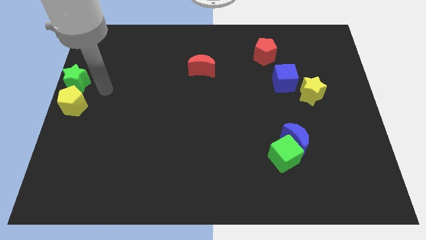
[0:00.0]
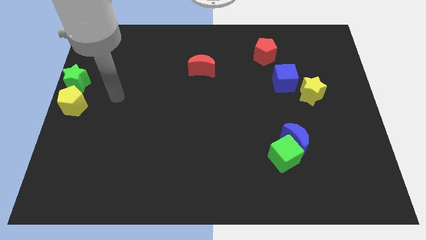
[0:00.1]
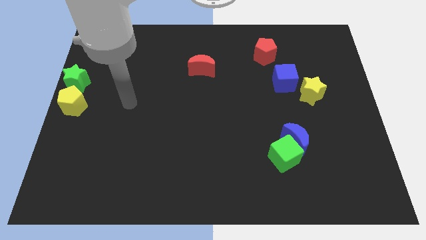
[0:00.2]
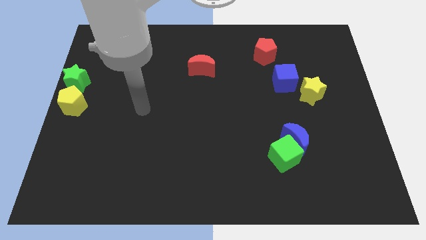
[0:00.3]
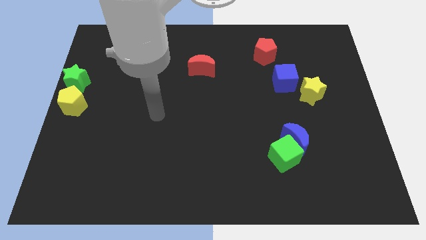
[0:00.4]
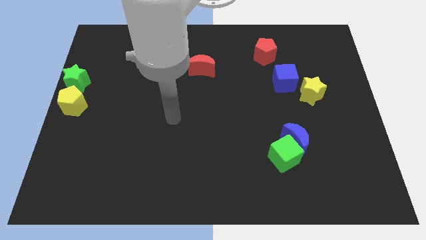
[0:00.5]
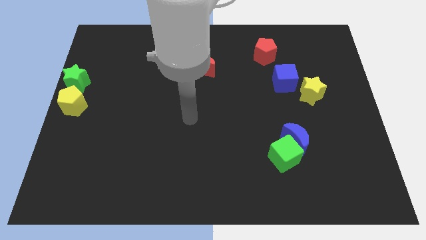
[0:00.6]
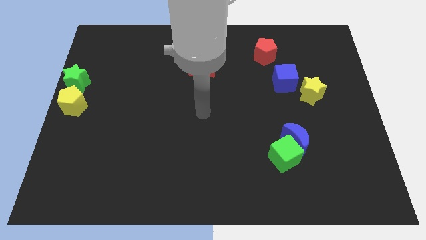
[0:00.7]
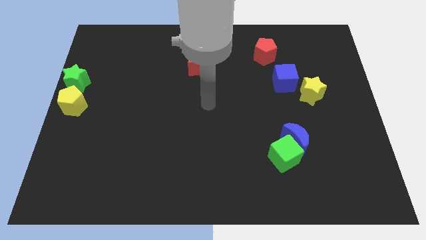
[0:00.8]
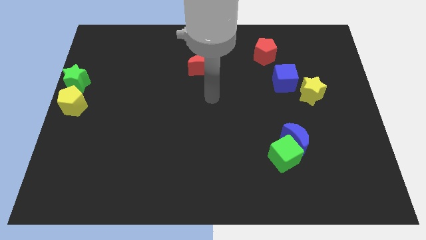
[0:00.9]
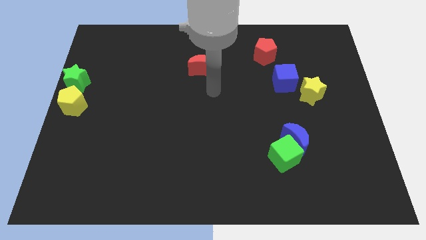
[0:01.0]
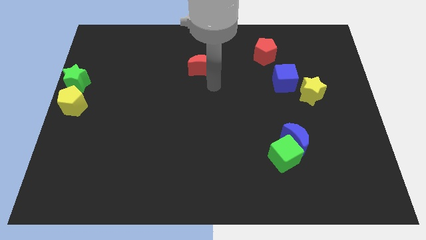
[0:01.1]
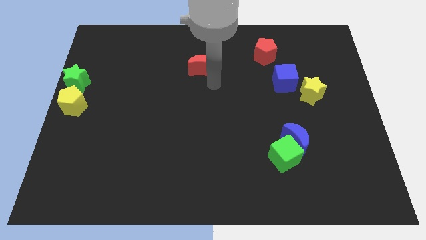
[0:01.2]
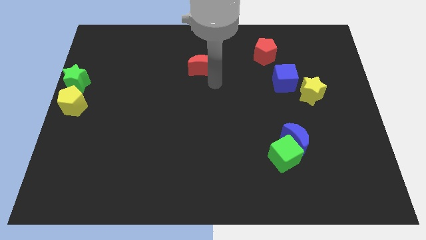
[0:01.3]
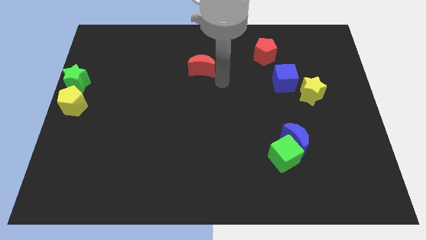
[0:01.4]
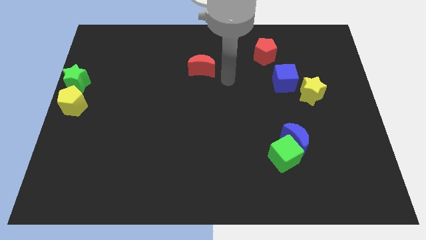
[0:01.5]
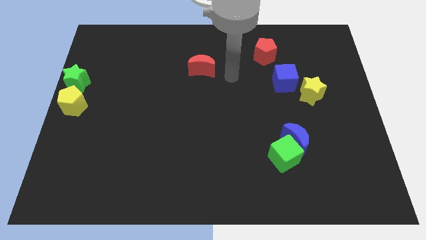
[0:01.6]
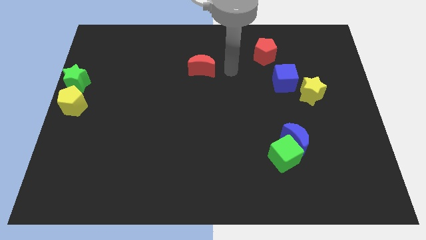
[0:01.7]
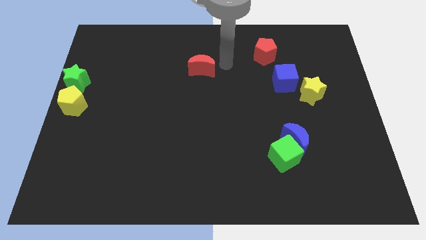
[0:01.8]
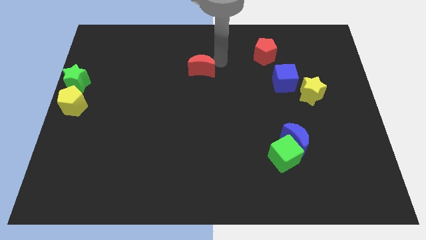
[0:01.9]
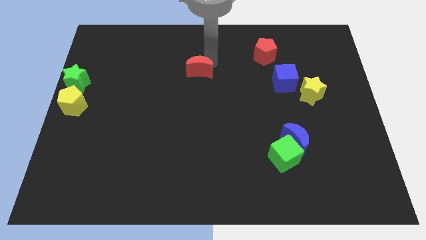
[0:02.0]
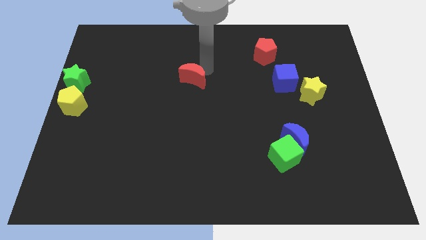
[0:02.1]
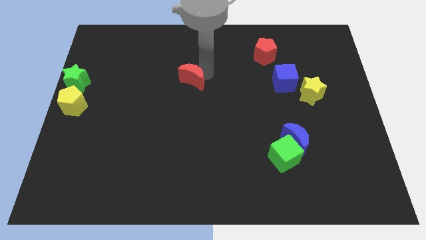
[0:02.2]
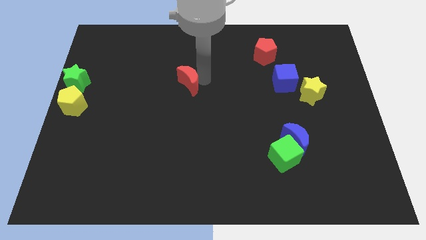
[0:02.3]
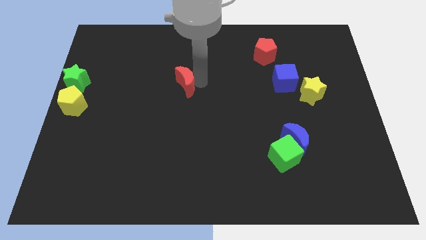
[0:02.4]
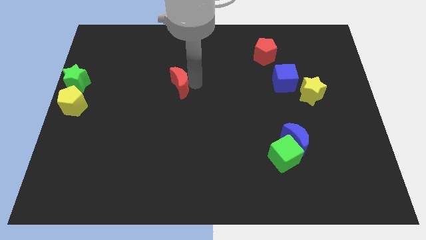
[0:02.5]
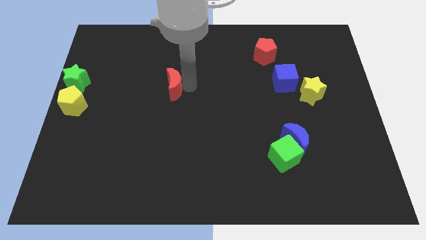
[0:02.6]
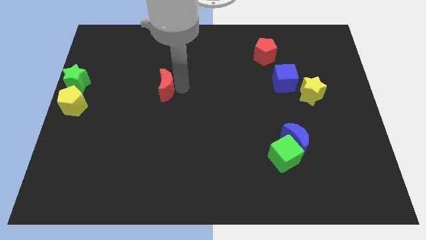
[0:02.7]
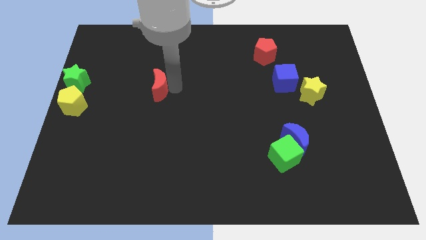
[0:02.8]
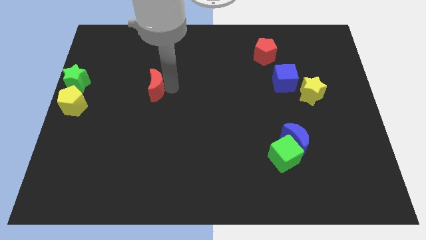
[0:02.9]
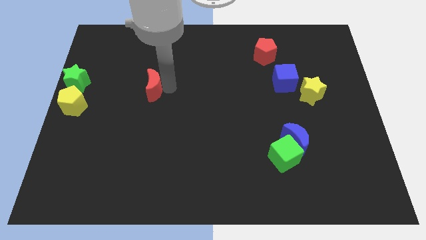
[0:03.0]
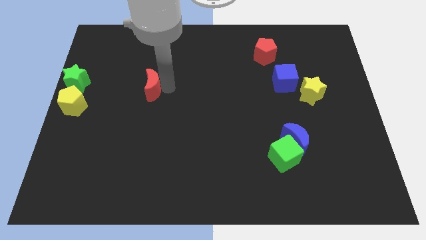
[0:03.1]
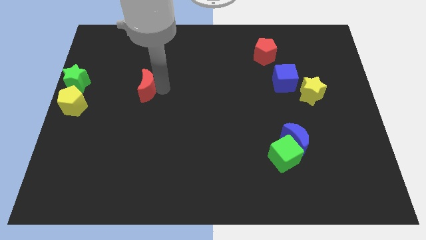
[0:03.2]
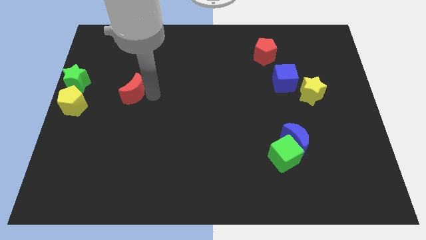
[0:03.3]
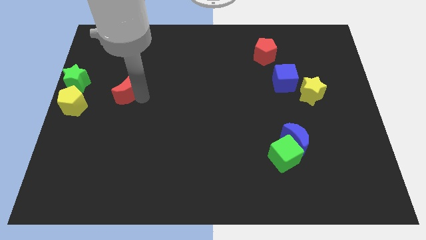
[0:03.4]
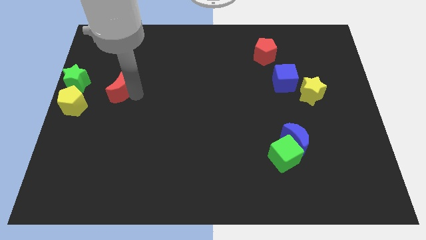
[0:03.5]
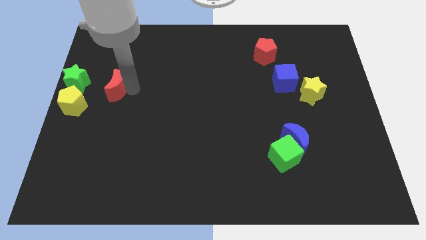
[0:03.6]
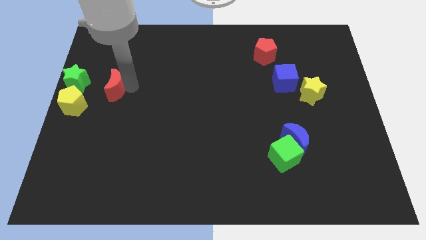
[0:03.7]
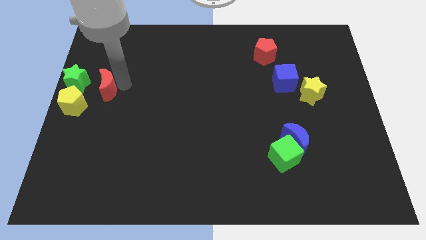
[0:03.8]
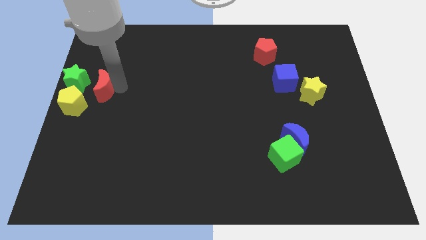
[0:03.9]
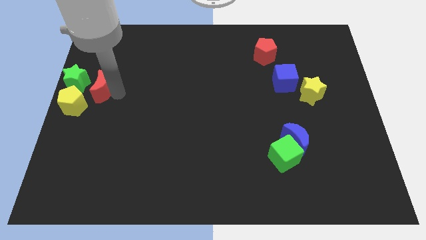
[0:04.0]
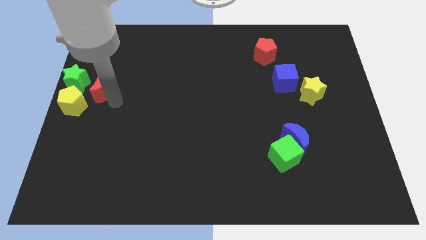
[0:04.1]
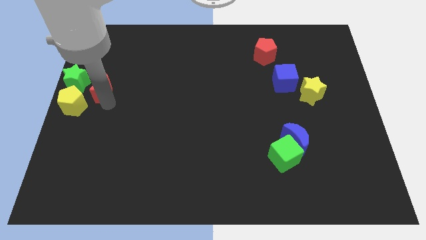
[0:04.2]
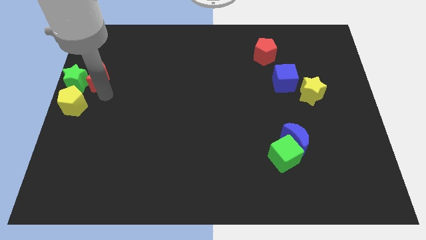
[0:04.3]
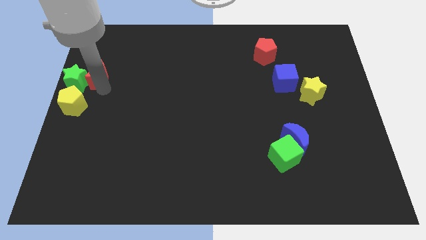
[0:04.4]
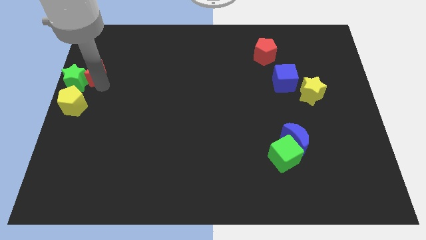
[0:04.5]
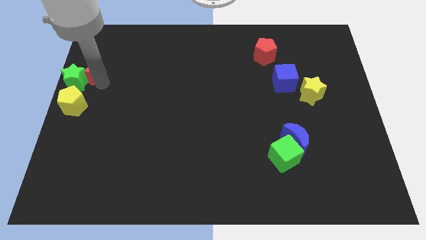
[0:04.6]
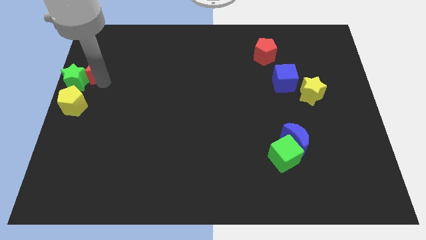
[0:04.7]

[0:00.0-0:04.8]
move the red crescent into the green star

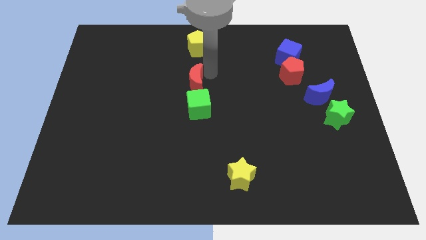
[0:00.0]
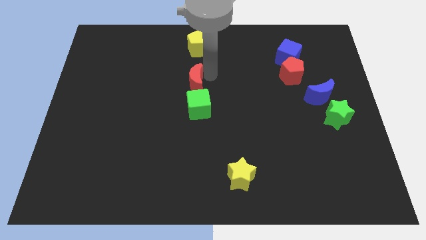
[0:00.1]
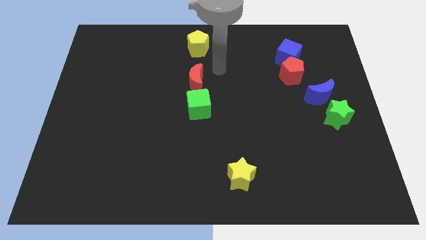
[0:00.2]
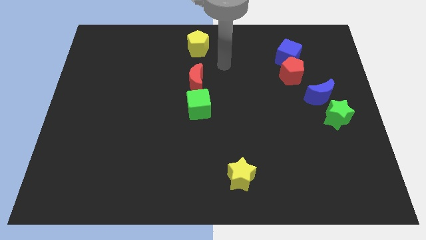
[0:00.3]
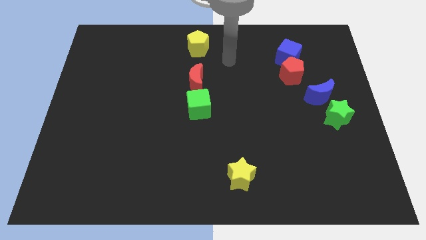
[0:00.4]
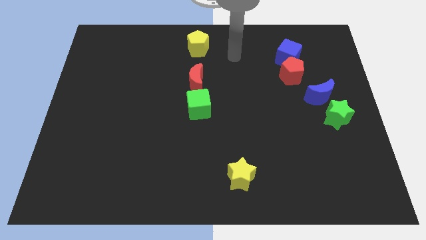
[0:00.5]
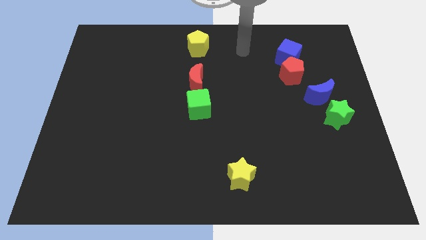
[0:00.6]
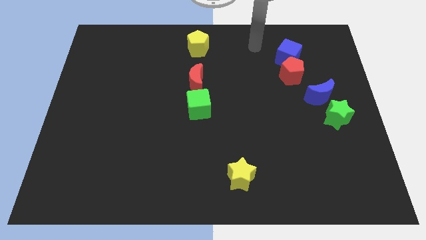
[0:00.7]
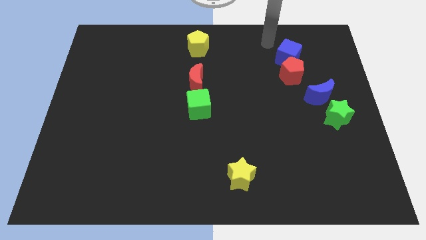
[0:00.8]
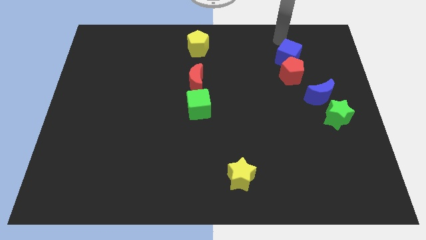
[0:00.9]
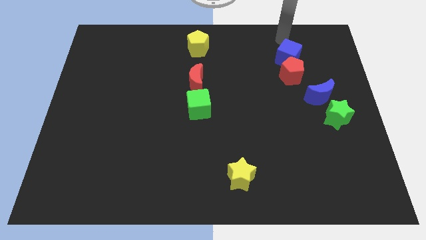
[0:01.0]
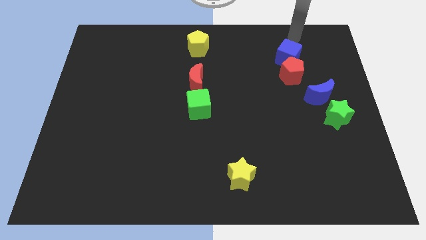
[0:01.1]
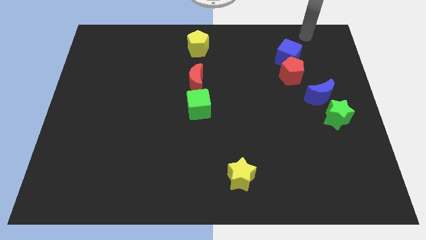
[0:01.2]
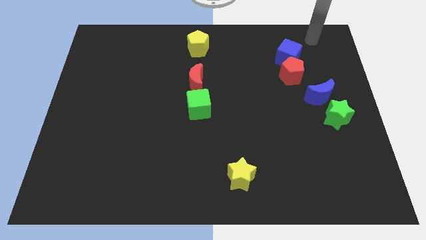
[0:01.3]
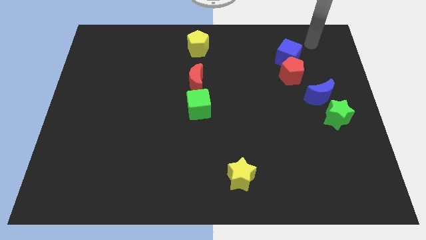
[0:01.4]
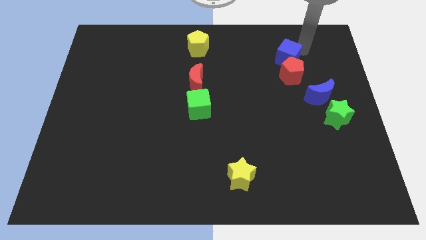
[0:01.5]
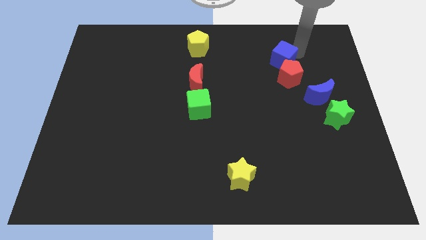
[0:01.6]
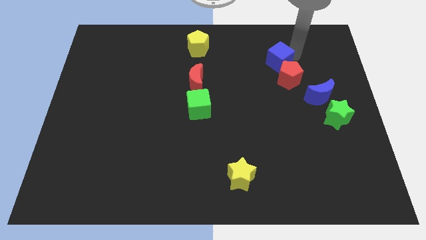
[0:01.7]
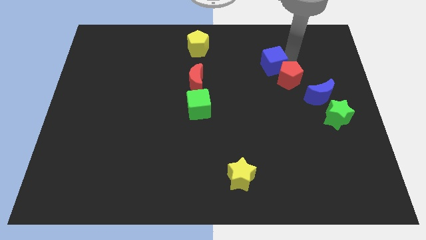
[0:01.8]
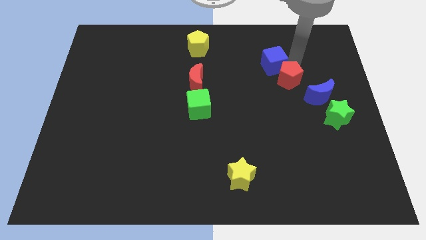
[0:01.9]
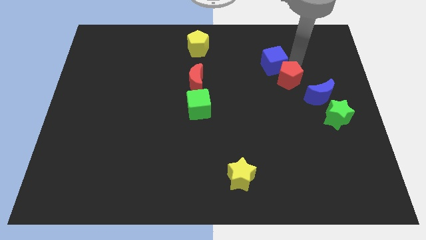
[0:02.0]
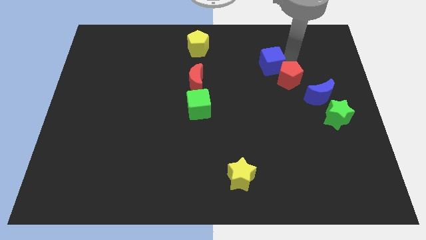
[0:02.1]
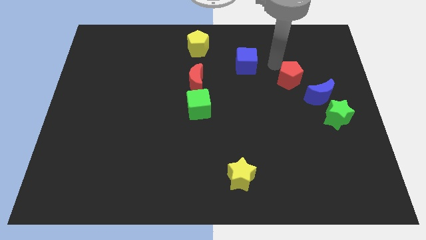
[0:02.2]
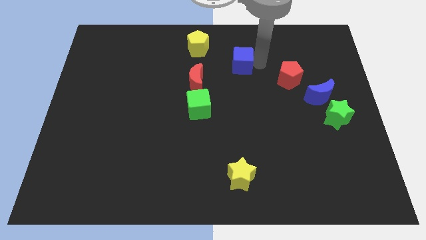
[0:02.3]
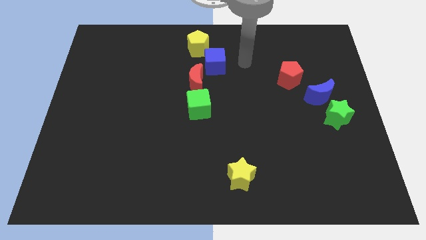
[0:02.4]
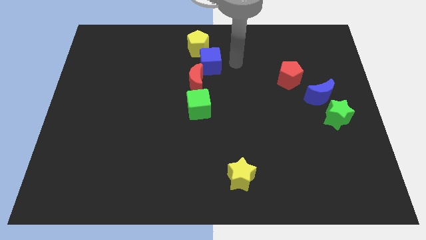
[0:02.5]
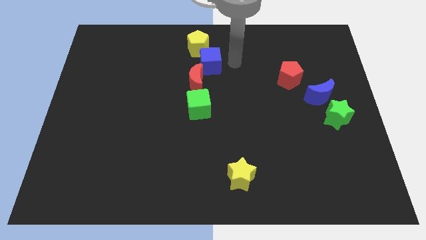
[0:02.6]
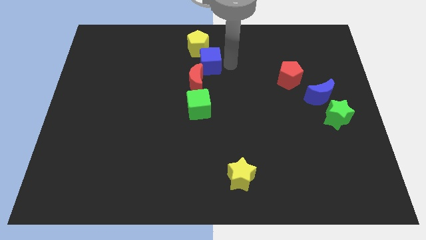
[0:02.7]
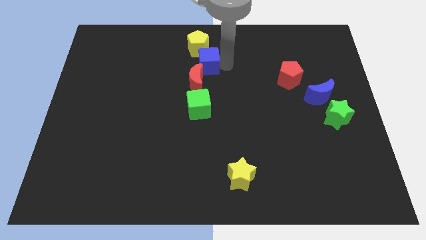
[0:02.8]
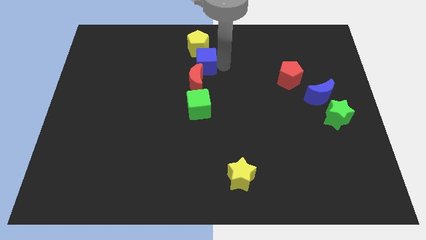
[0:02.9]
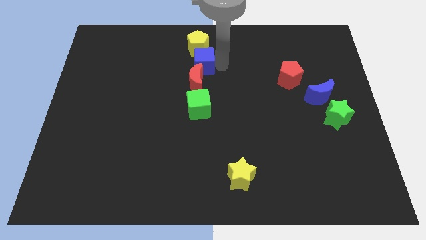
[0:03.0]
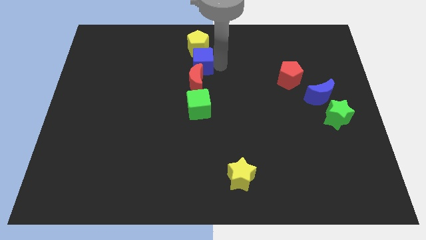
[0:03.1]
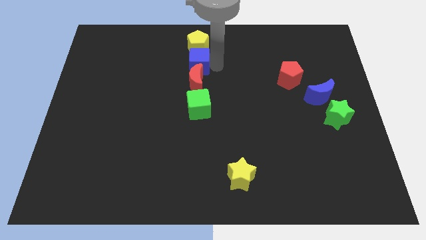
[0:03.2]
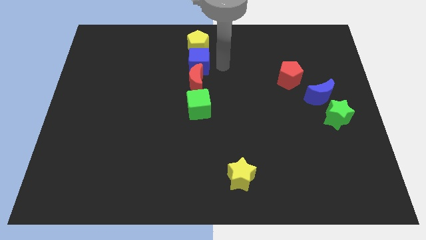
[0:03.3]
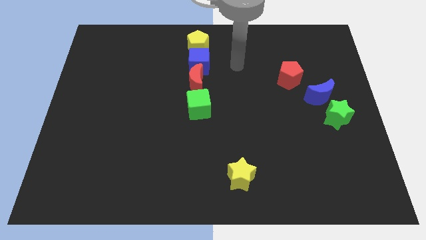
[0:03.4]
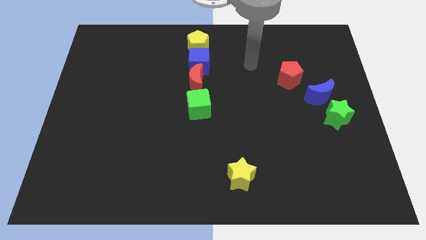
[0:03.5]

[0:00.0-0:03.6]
place the blue cube in between the red crescent and yellow pentagon

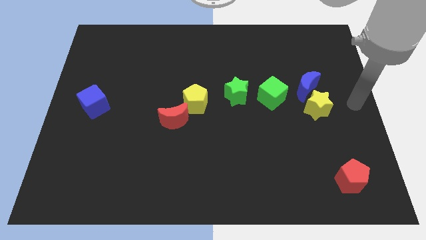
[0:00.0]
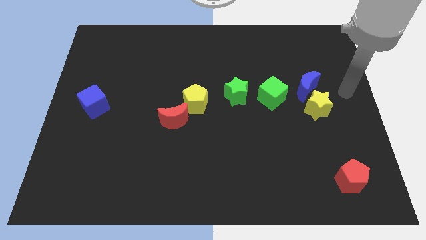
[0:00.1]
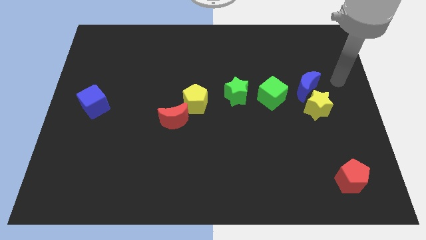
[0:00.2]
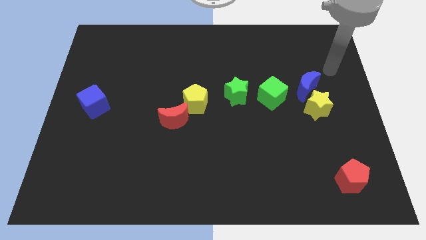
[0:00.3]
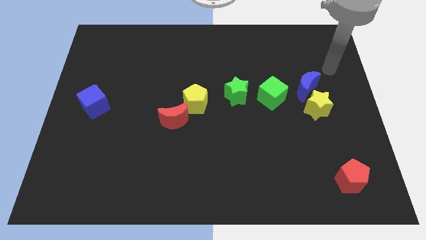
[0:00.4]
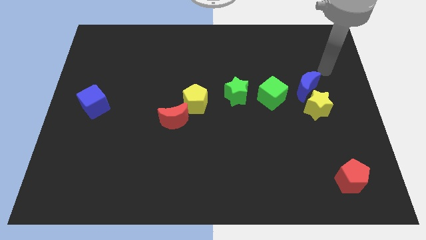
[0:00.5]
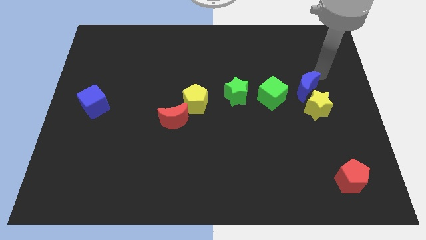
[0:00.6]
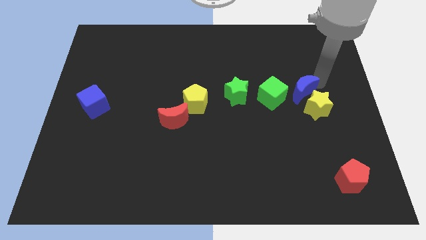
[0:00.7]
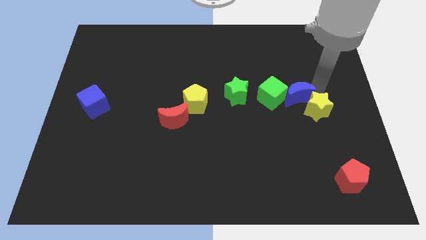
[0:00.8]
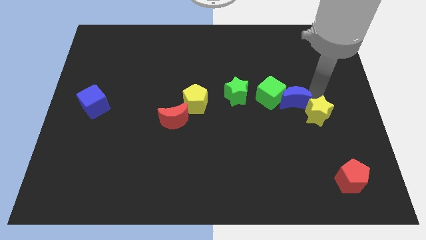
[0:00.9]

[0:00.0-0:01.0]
place the blue moon in between the green cube and yellow star
